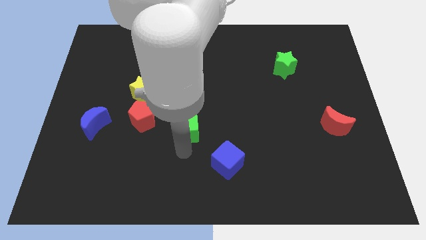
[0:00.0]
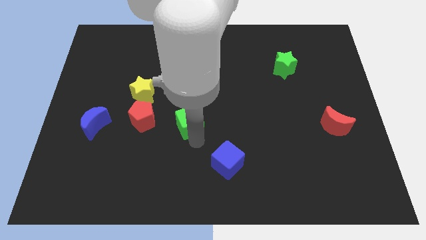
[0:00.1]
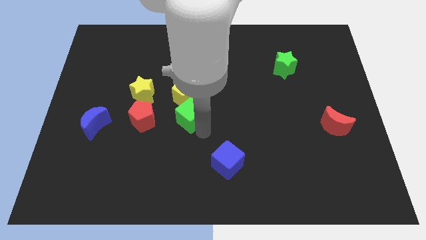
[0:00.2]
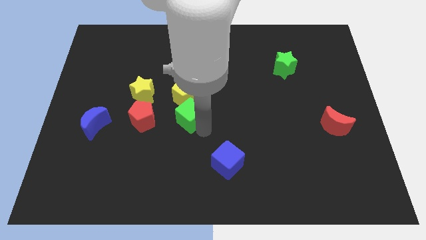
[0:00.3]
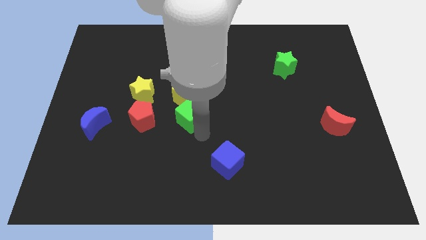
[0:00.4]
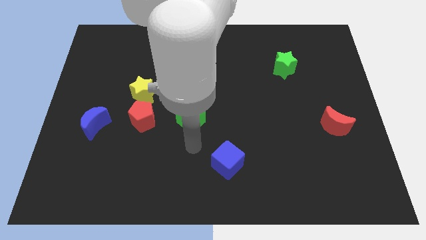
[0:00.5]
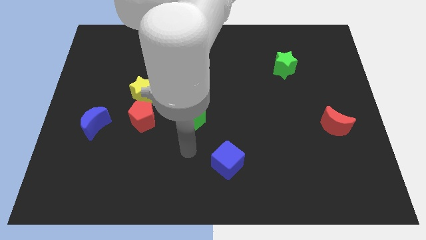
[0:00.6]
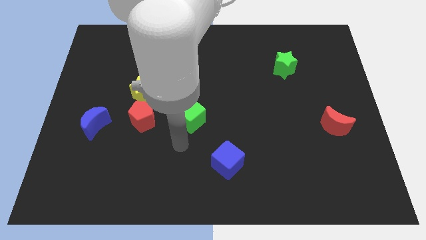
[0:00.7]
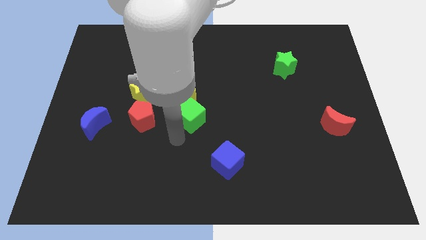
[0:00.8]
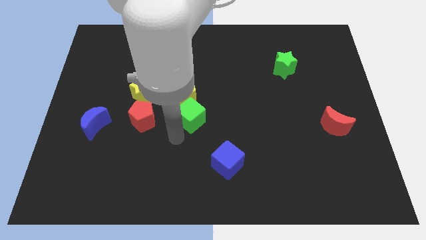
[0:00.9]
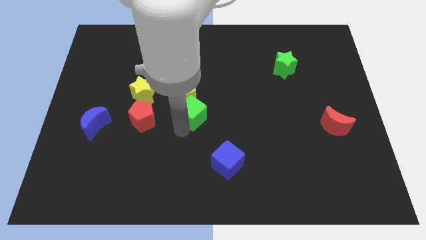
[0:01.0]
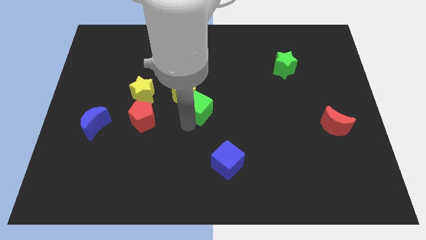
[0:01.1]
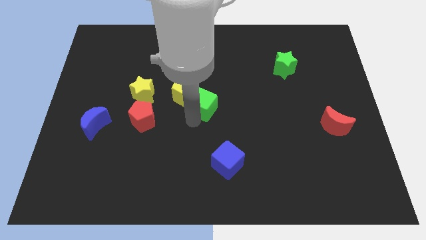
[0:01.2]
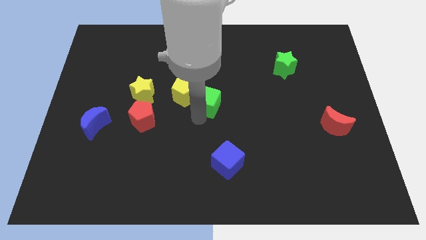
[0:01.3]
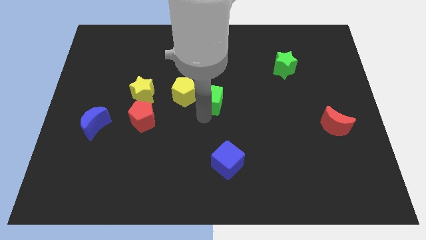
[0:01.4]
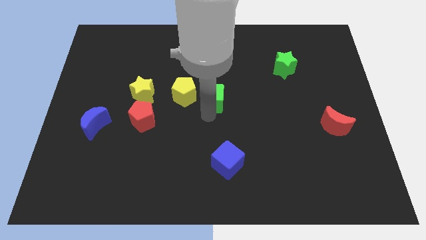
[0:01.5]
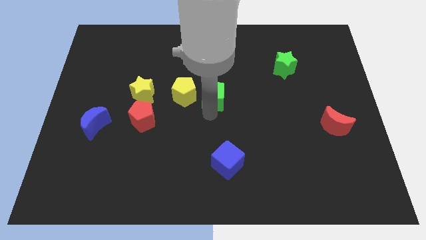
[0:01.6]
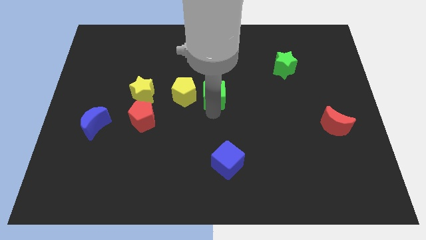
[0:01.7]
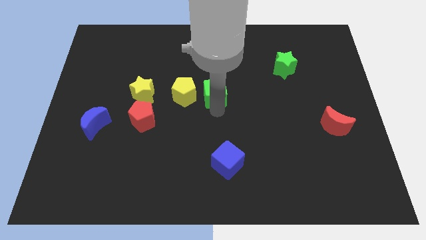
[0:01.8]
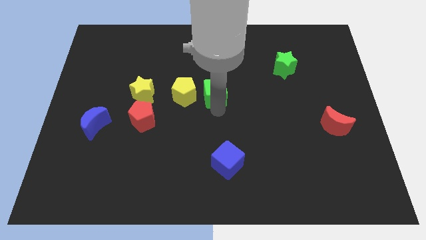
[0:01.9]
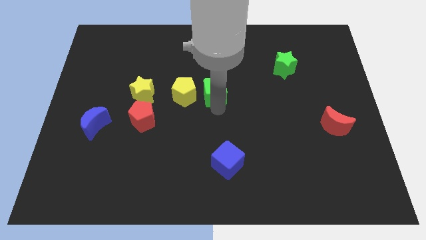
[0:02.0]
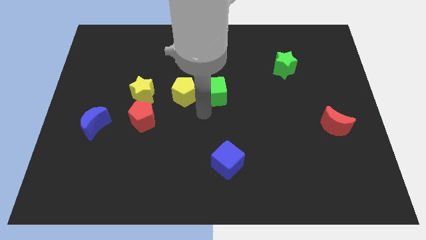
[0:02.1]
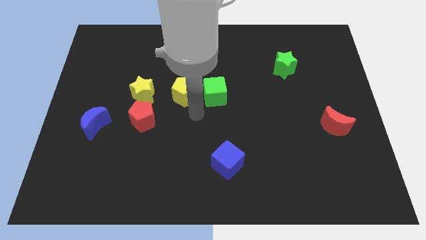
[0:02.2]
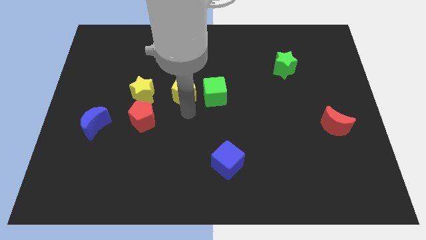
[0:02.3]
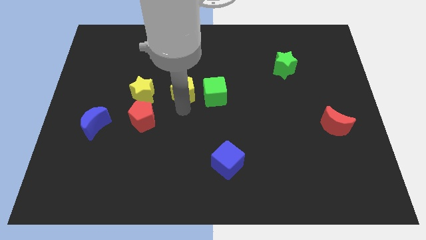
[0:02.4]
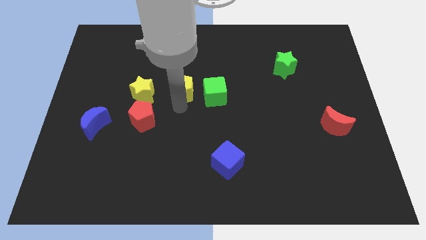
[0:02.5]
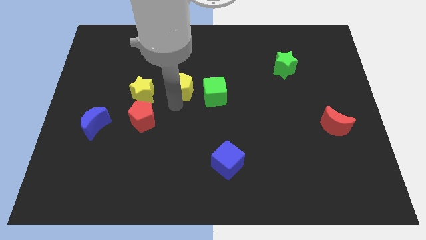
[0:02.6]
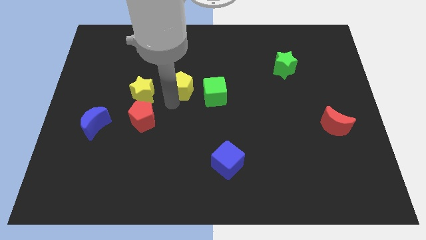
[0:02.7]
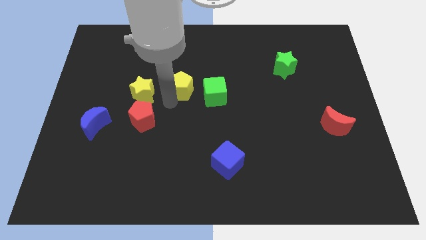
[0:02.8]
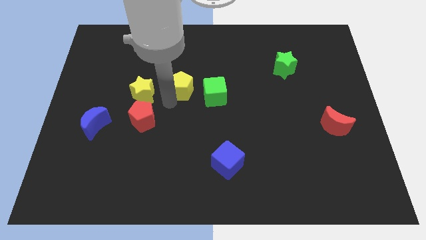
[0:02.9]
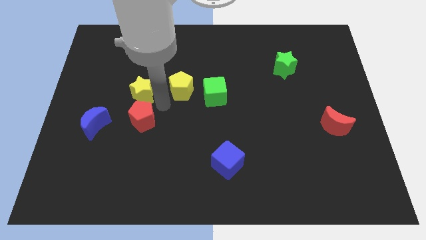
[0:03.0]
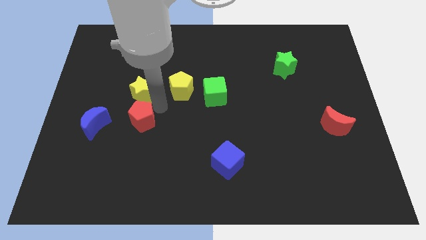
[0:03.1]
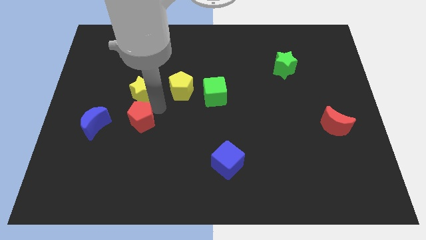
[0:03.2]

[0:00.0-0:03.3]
place the green cube to the right of yellow pentagon

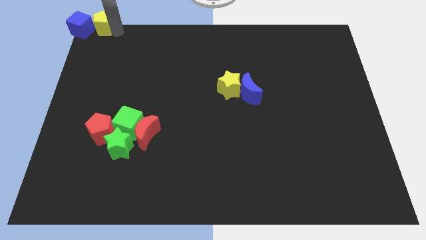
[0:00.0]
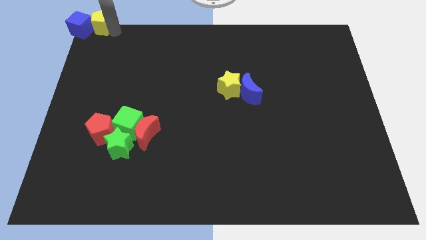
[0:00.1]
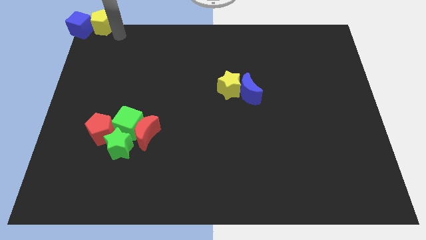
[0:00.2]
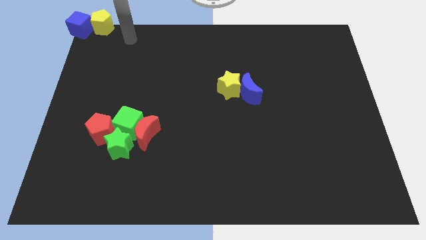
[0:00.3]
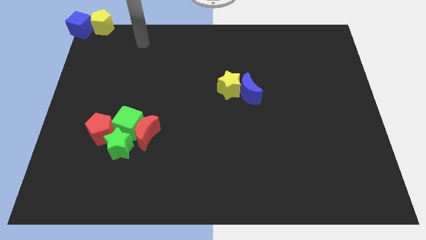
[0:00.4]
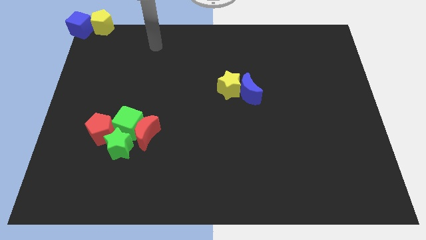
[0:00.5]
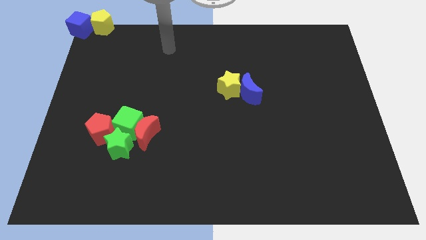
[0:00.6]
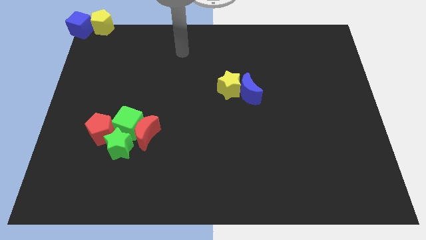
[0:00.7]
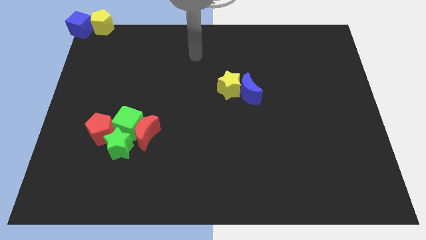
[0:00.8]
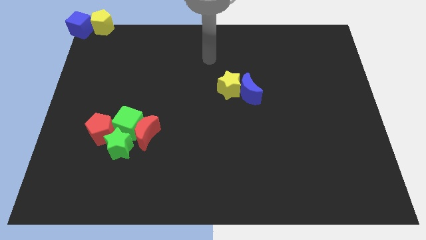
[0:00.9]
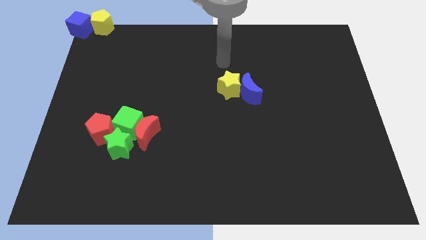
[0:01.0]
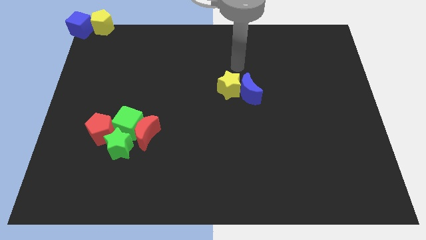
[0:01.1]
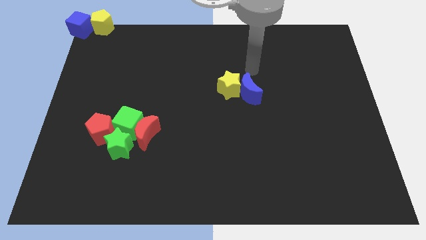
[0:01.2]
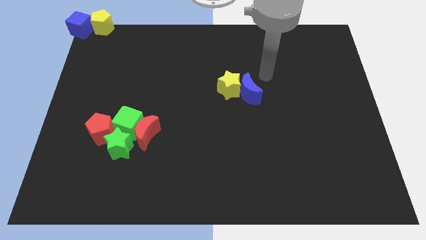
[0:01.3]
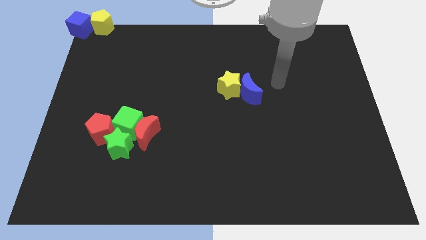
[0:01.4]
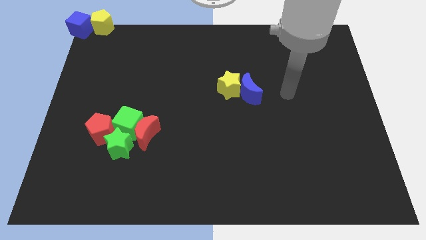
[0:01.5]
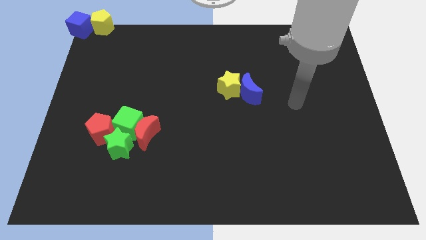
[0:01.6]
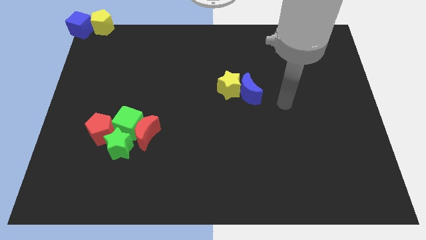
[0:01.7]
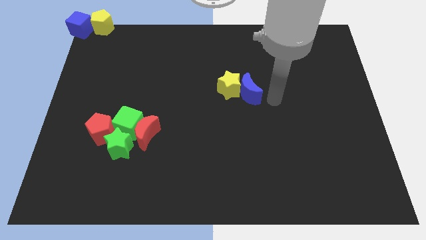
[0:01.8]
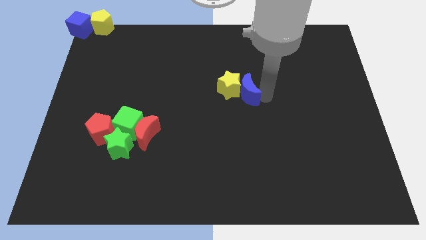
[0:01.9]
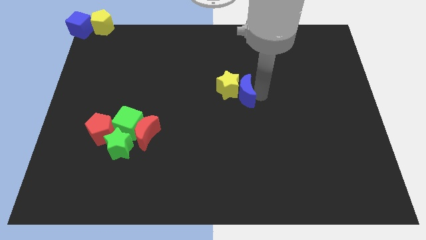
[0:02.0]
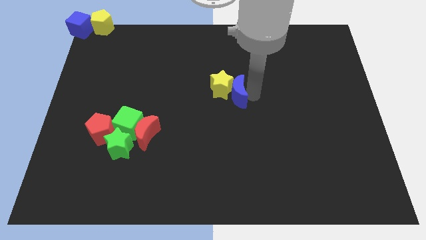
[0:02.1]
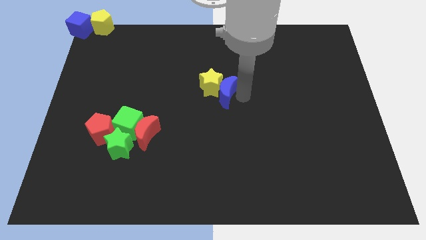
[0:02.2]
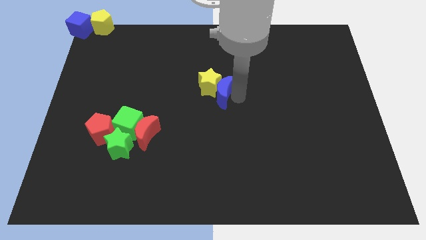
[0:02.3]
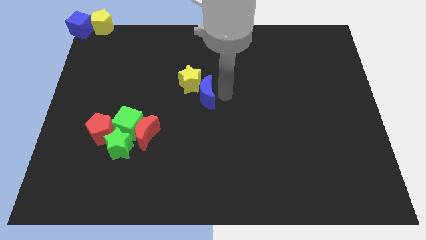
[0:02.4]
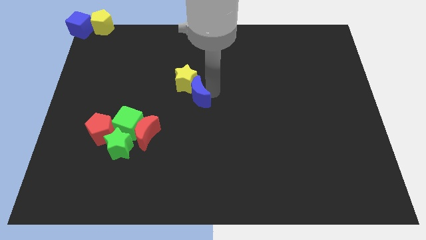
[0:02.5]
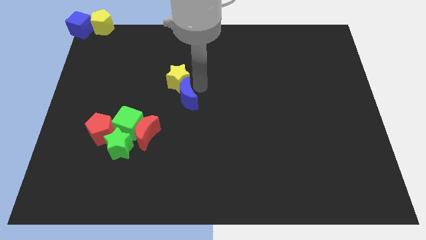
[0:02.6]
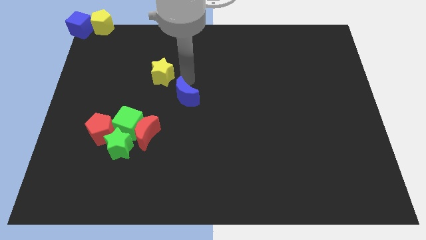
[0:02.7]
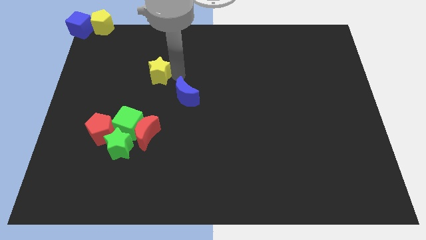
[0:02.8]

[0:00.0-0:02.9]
push the yellow star and blue moon towards the left side

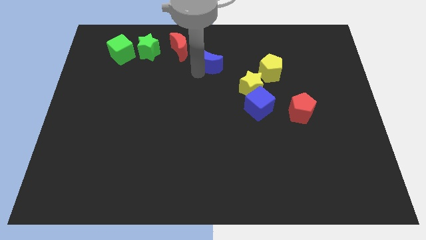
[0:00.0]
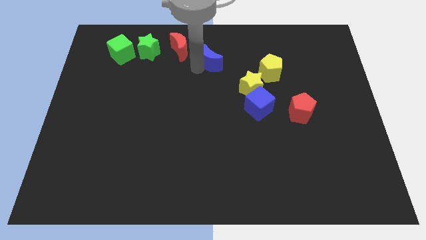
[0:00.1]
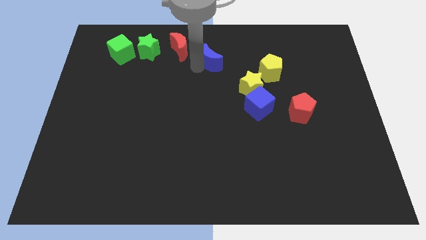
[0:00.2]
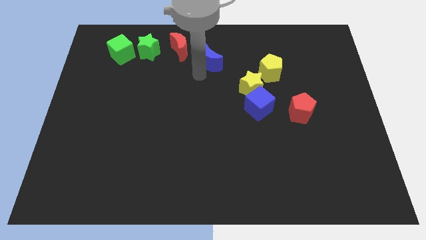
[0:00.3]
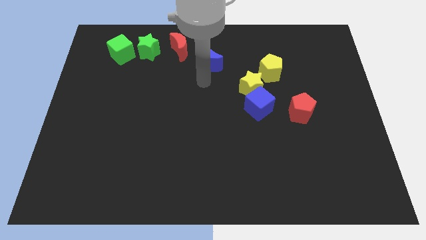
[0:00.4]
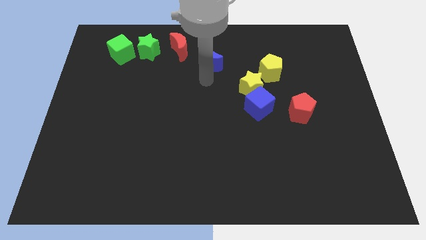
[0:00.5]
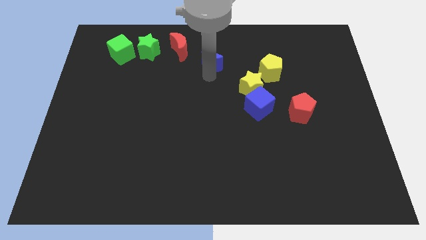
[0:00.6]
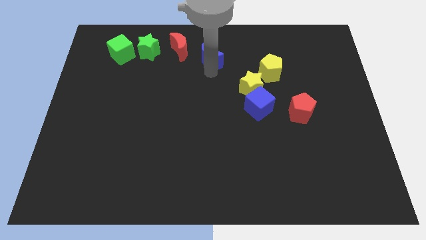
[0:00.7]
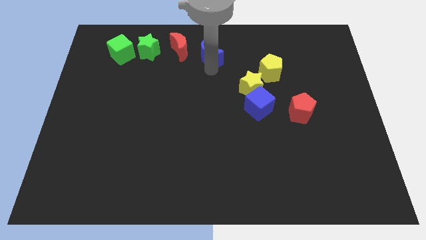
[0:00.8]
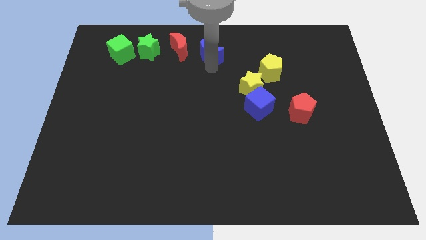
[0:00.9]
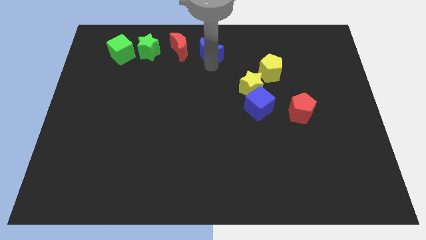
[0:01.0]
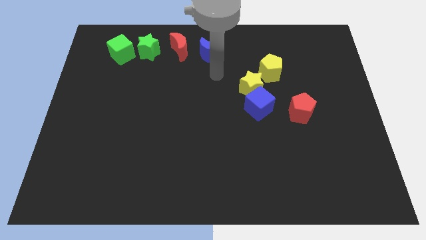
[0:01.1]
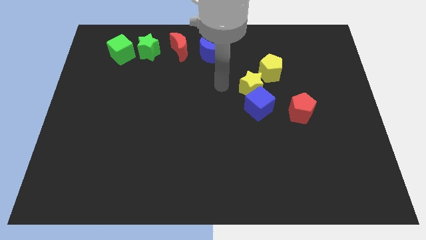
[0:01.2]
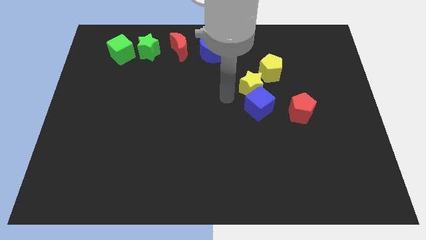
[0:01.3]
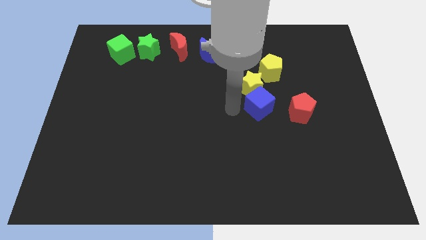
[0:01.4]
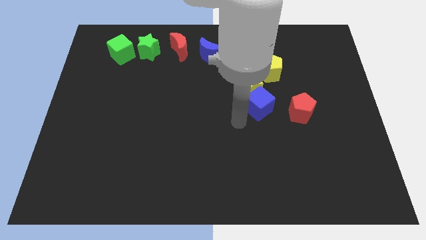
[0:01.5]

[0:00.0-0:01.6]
move the blue moon to the top center of the board

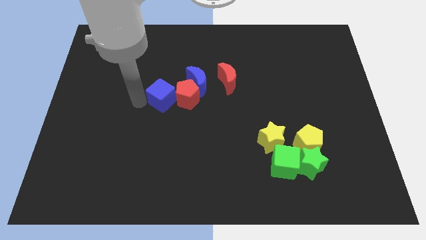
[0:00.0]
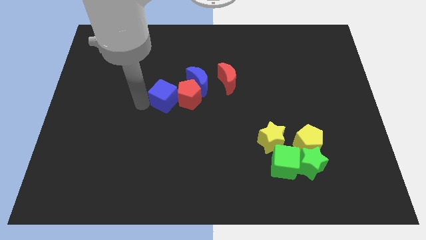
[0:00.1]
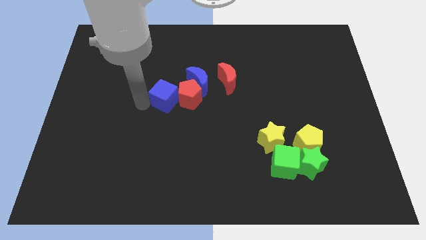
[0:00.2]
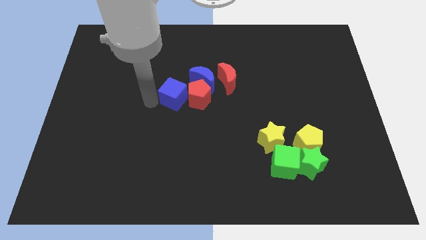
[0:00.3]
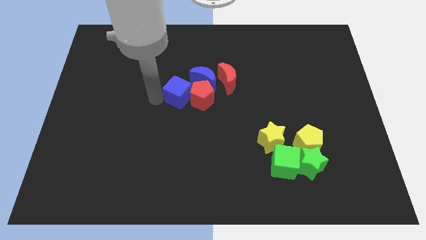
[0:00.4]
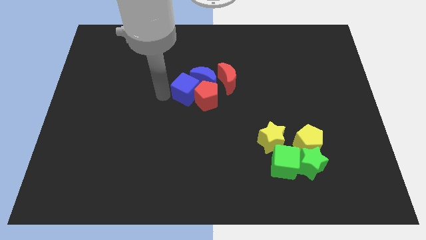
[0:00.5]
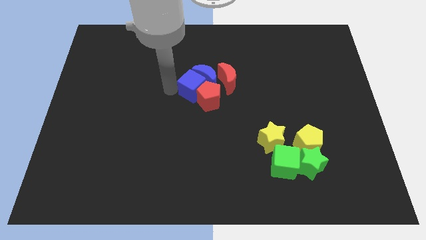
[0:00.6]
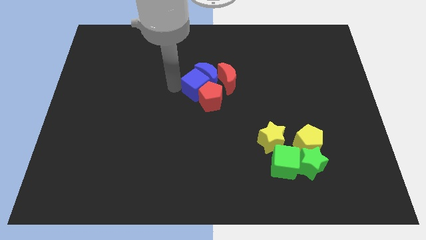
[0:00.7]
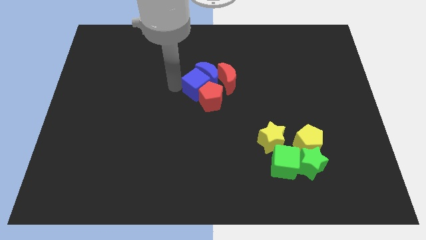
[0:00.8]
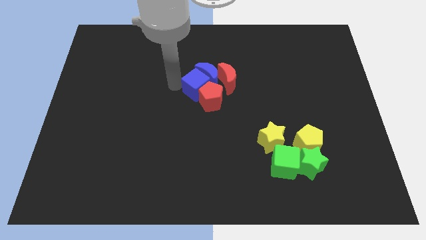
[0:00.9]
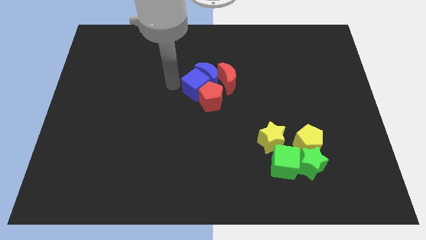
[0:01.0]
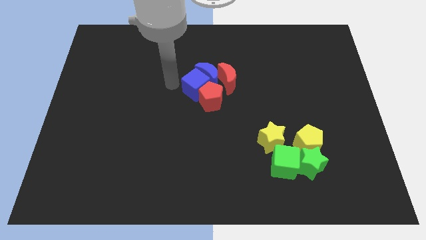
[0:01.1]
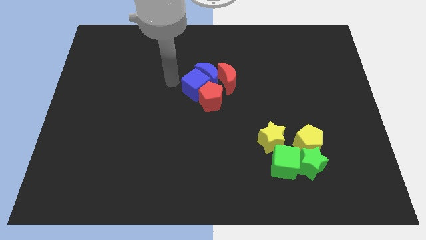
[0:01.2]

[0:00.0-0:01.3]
push the blue cube into the blue crescent
